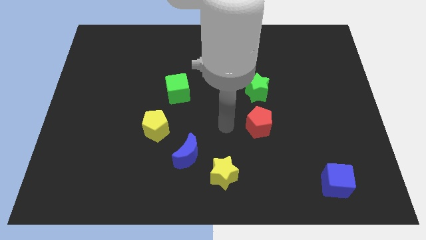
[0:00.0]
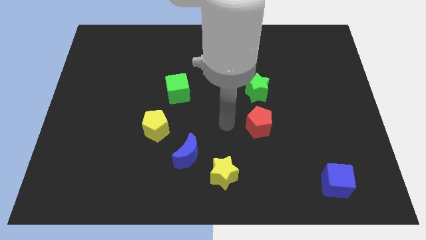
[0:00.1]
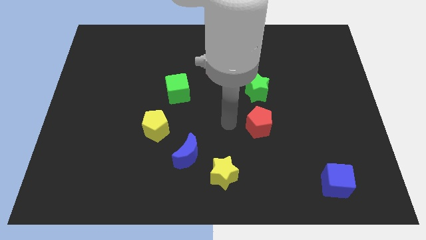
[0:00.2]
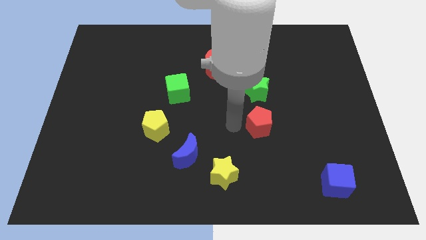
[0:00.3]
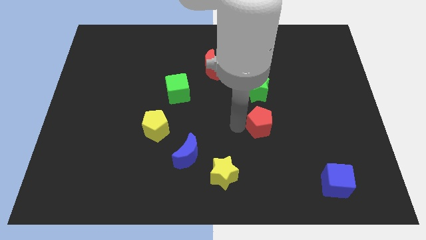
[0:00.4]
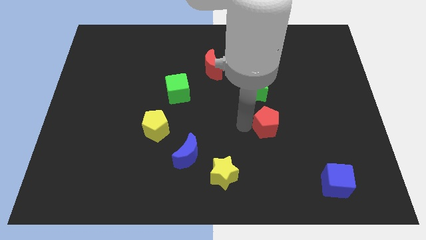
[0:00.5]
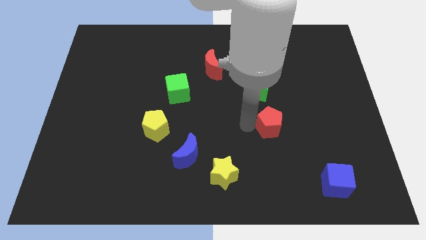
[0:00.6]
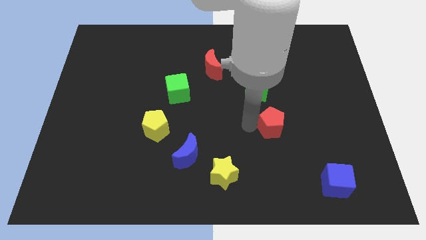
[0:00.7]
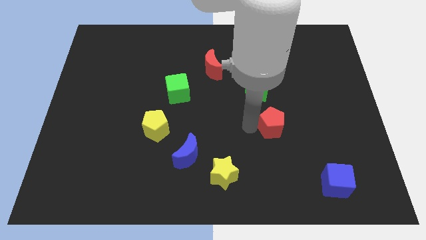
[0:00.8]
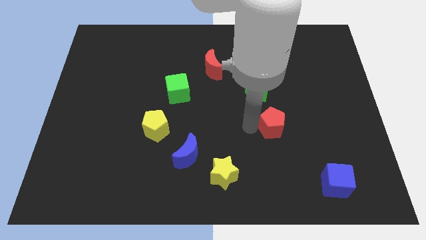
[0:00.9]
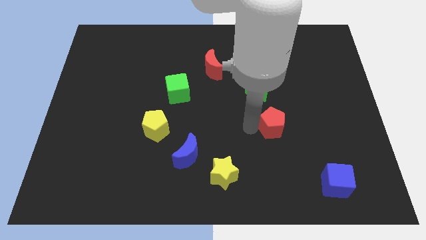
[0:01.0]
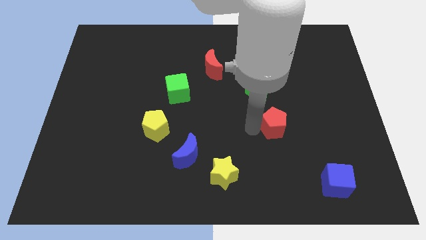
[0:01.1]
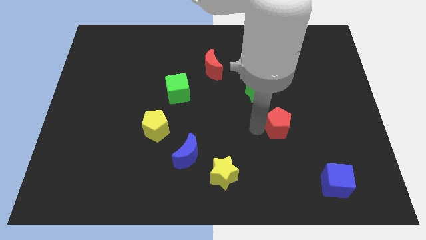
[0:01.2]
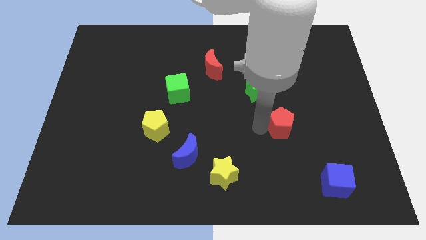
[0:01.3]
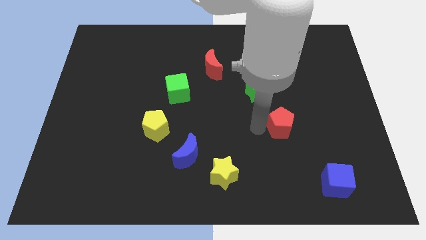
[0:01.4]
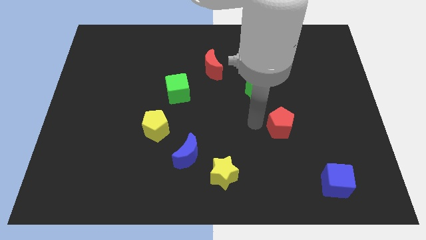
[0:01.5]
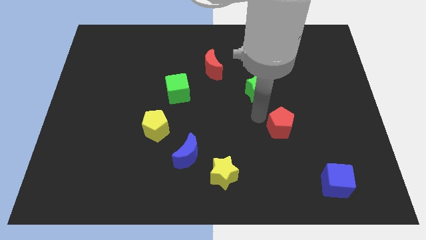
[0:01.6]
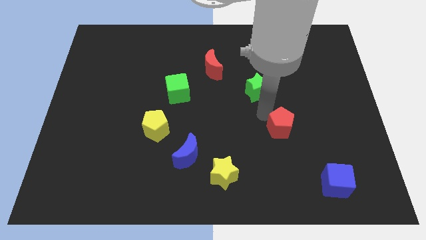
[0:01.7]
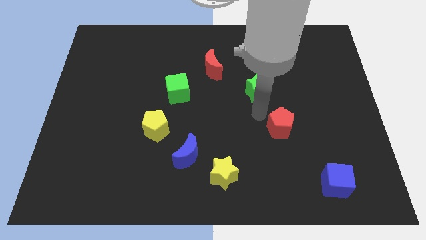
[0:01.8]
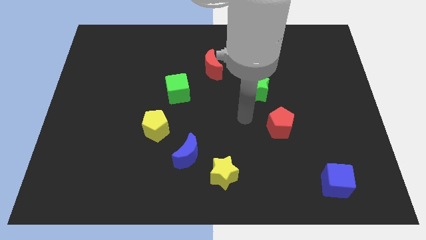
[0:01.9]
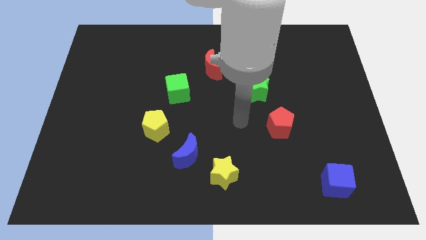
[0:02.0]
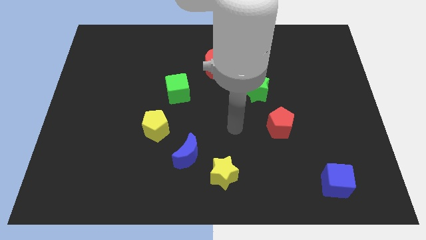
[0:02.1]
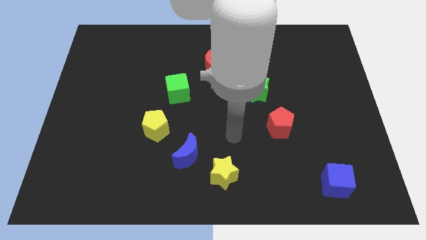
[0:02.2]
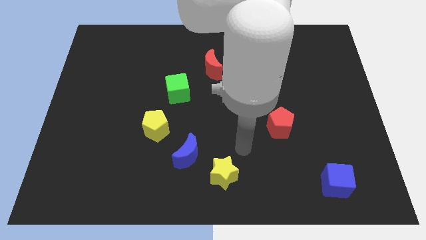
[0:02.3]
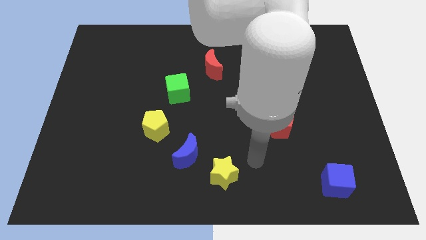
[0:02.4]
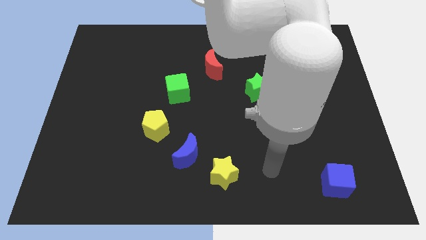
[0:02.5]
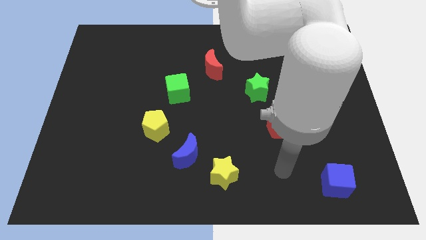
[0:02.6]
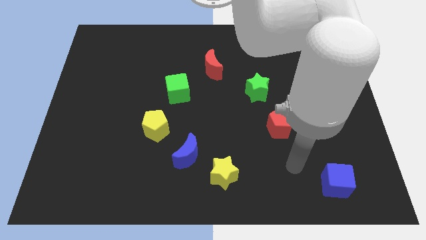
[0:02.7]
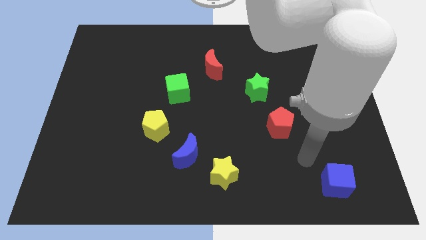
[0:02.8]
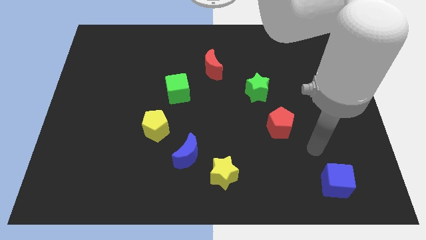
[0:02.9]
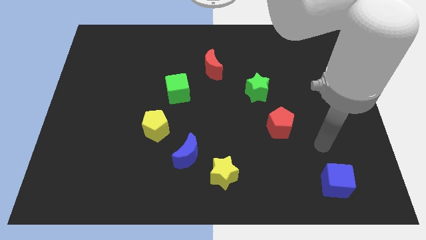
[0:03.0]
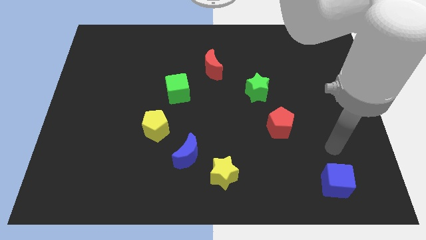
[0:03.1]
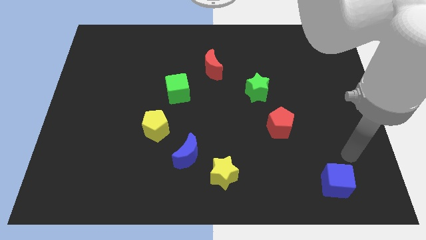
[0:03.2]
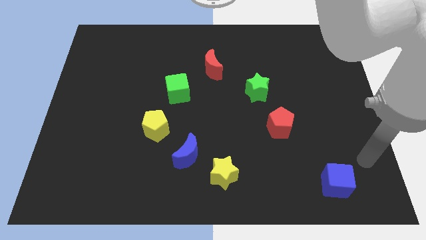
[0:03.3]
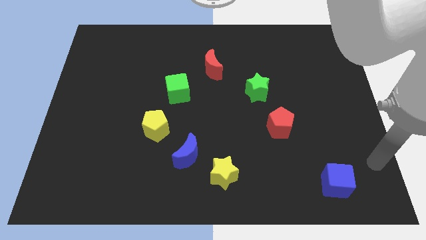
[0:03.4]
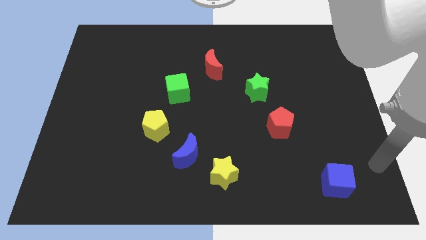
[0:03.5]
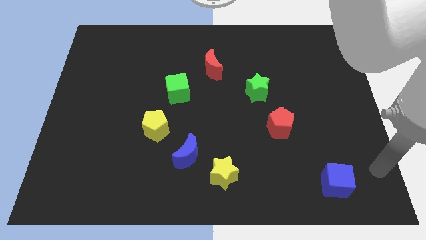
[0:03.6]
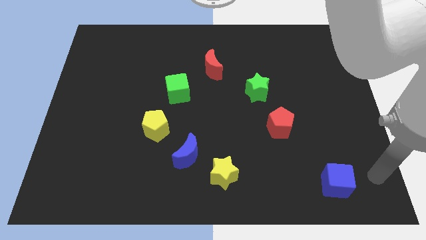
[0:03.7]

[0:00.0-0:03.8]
push the red pentagon slightly to the right

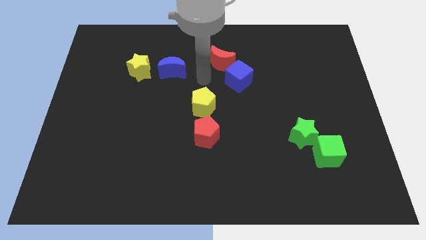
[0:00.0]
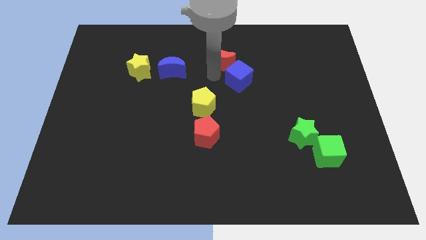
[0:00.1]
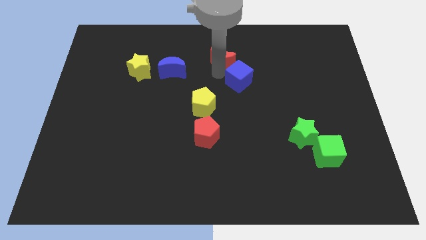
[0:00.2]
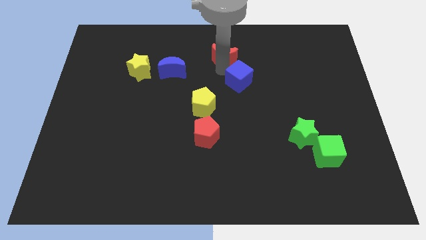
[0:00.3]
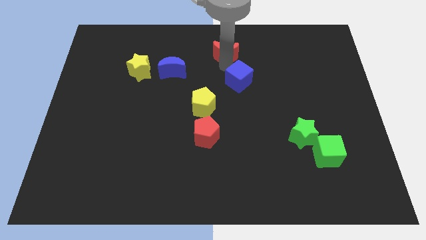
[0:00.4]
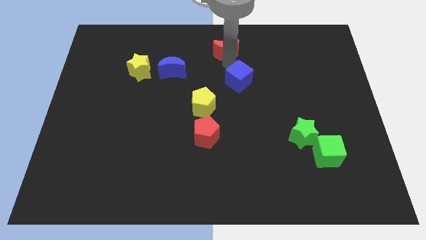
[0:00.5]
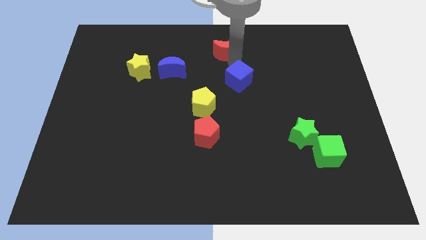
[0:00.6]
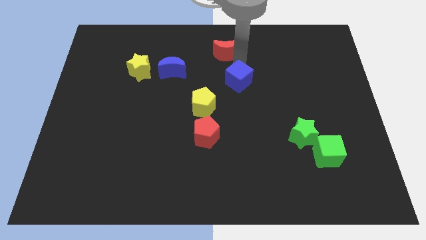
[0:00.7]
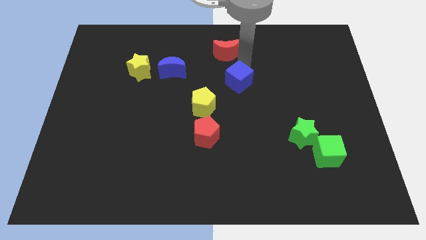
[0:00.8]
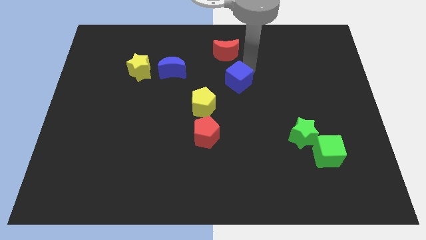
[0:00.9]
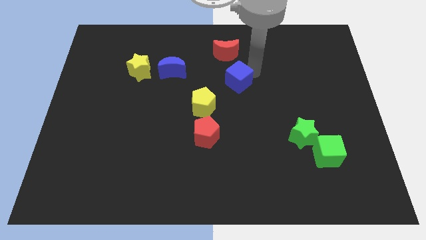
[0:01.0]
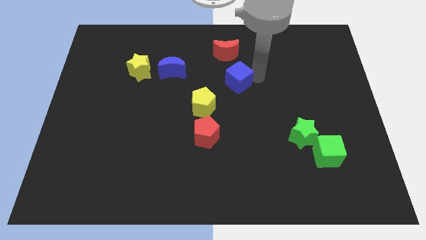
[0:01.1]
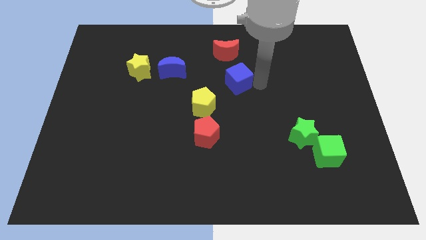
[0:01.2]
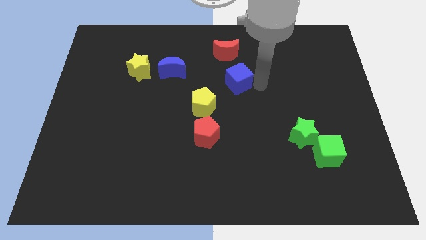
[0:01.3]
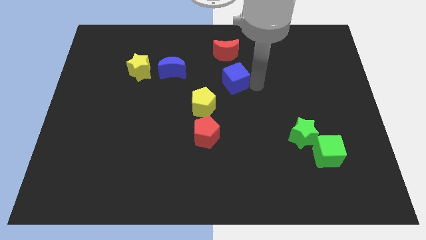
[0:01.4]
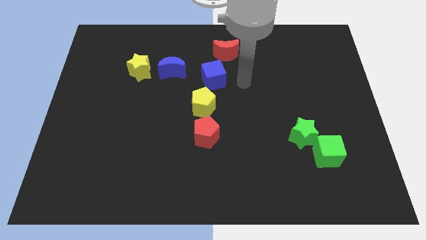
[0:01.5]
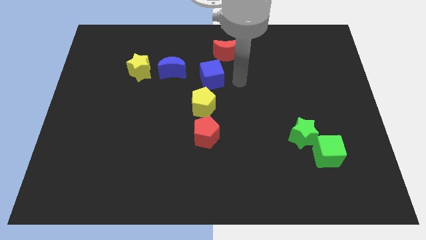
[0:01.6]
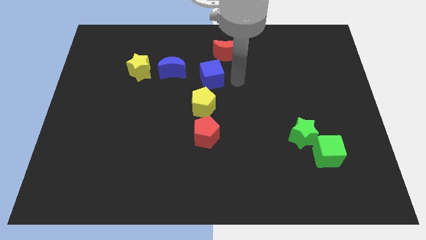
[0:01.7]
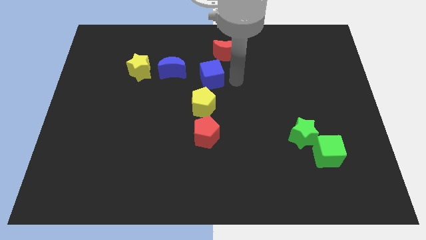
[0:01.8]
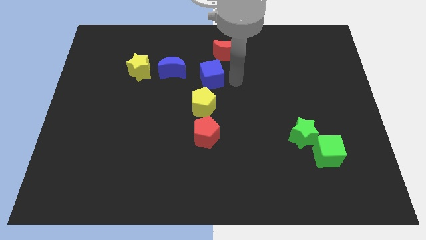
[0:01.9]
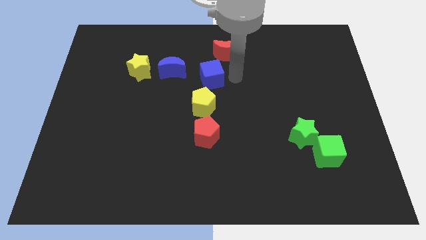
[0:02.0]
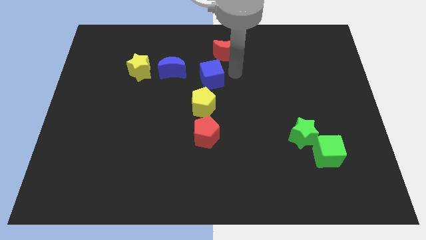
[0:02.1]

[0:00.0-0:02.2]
push blue cube to the left

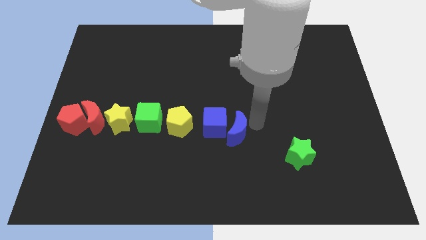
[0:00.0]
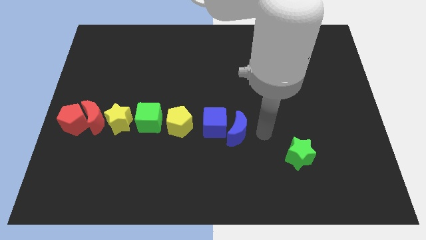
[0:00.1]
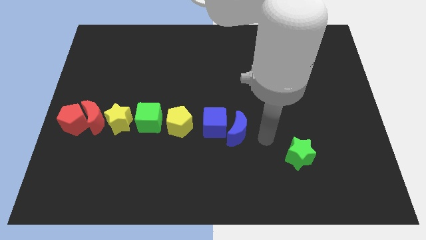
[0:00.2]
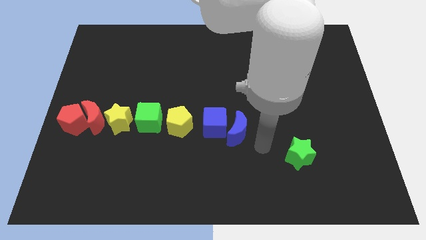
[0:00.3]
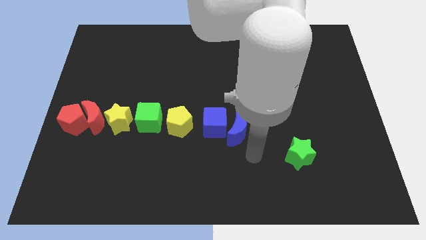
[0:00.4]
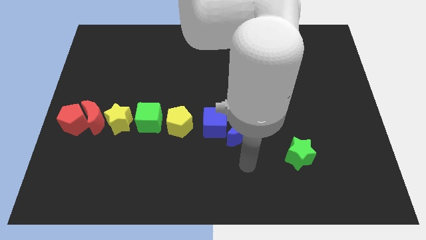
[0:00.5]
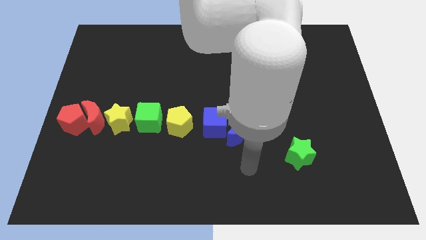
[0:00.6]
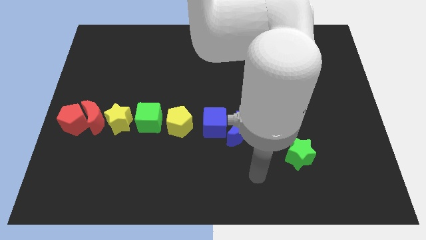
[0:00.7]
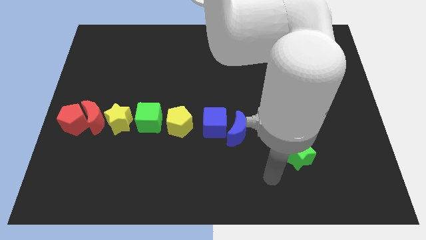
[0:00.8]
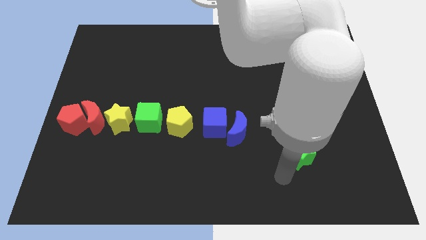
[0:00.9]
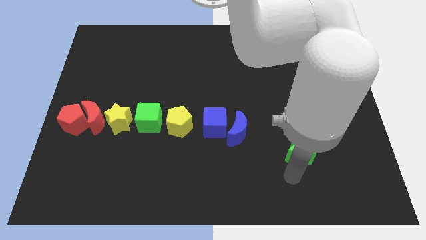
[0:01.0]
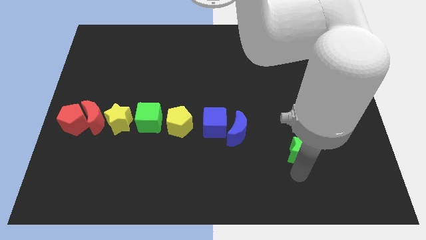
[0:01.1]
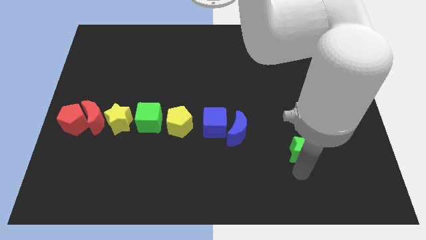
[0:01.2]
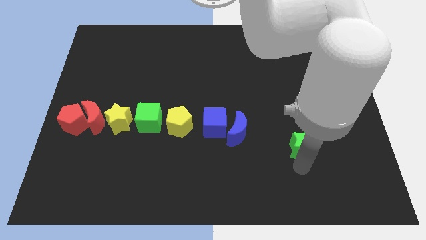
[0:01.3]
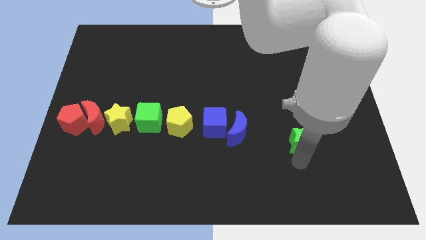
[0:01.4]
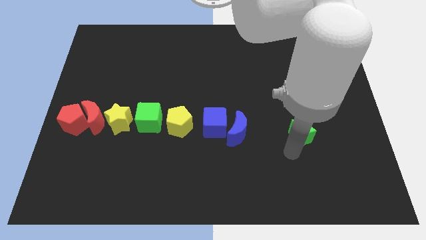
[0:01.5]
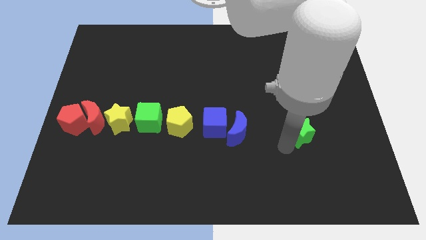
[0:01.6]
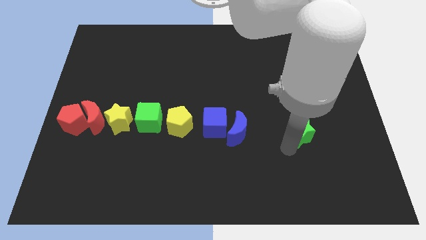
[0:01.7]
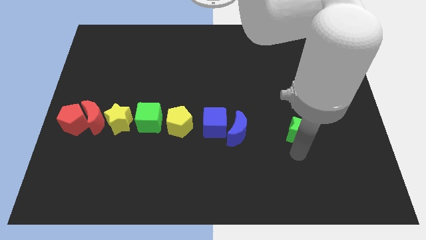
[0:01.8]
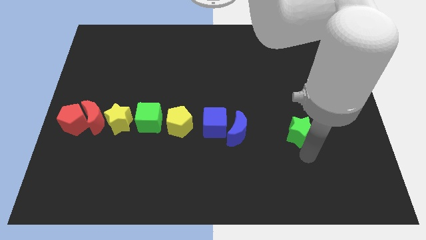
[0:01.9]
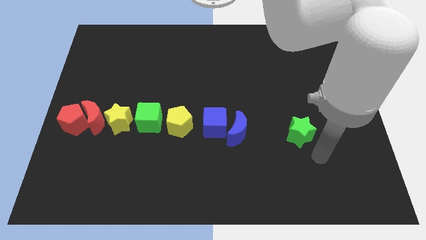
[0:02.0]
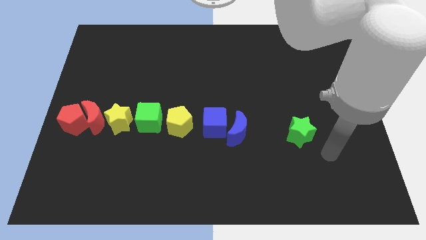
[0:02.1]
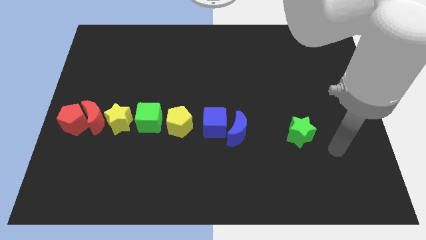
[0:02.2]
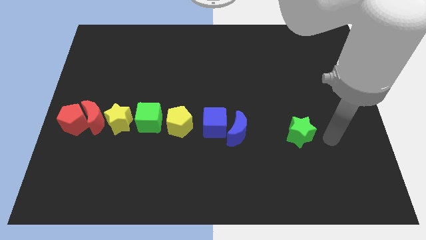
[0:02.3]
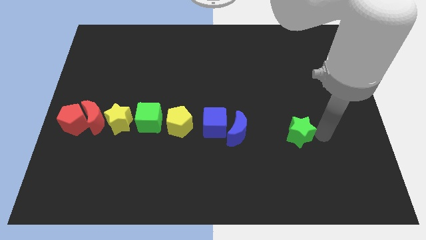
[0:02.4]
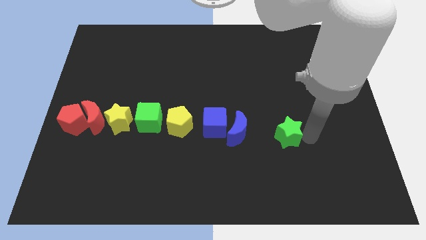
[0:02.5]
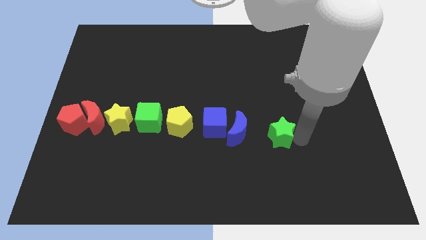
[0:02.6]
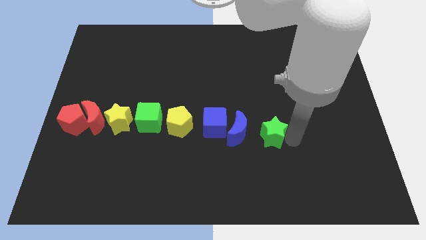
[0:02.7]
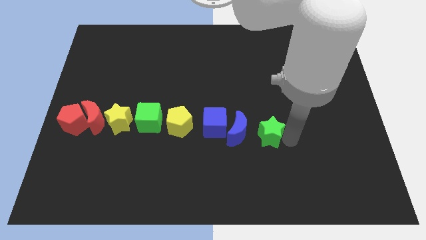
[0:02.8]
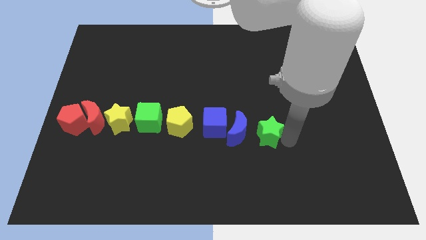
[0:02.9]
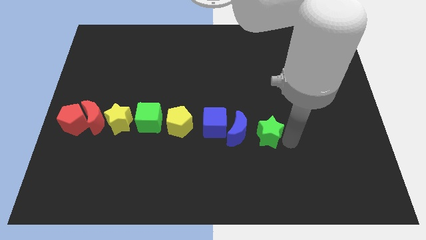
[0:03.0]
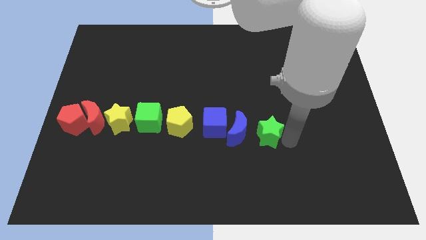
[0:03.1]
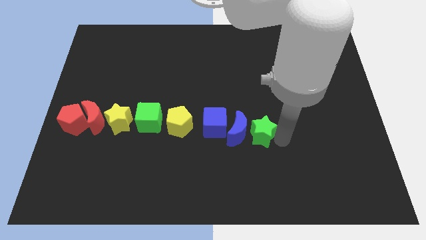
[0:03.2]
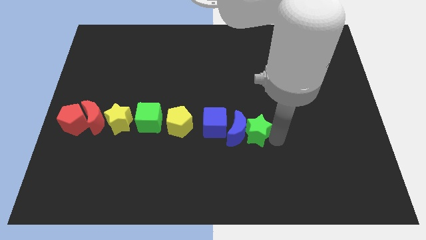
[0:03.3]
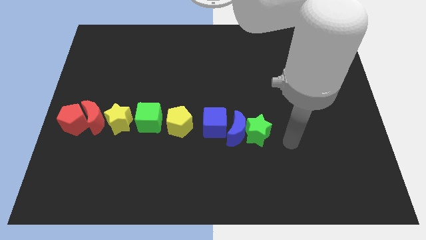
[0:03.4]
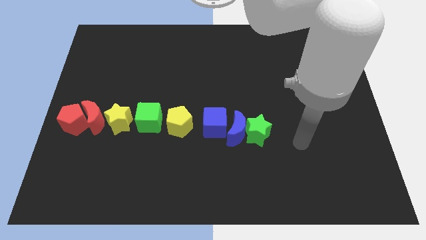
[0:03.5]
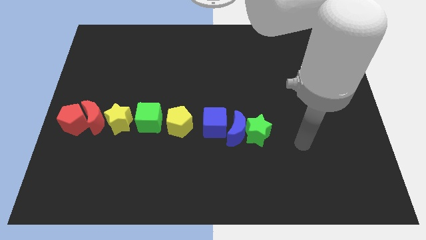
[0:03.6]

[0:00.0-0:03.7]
push the green star to the right side of the blue moon
